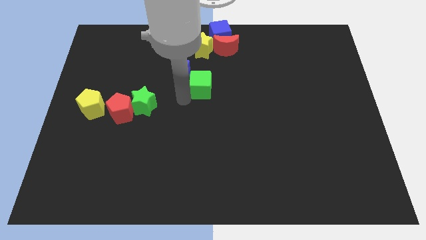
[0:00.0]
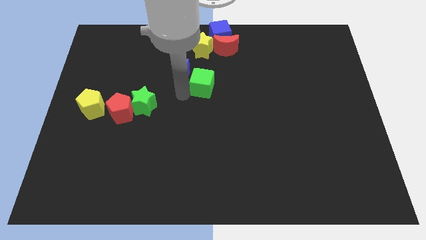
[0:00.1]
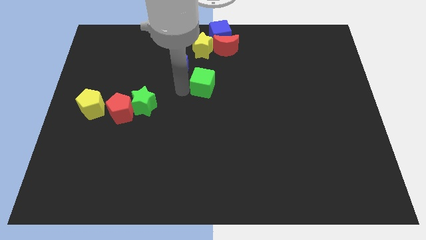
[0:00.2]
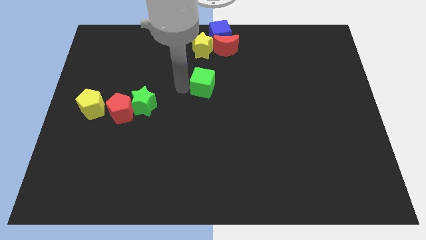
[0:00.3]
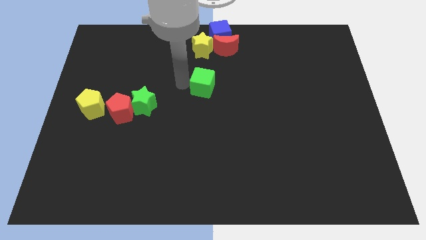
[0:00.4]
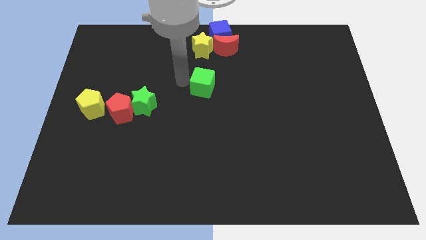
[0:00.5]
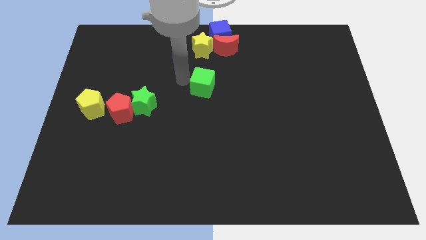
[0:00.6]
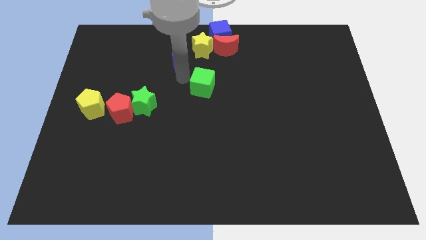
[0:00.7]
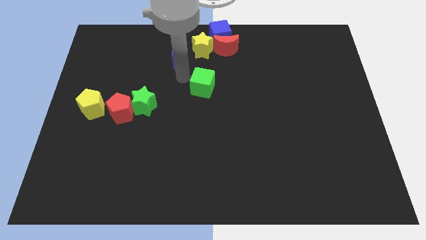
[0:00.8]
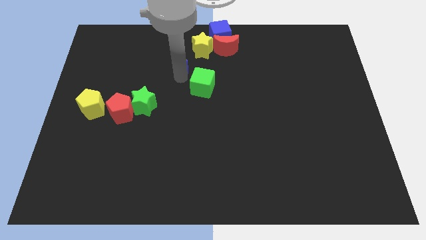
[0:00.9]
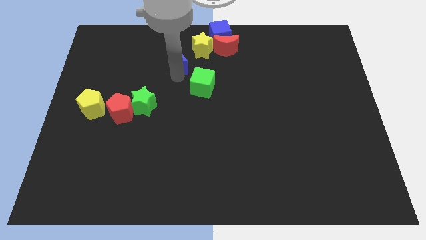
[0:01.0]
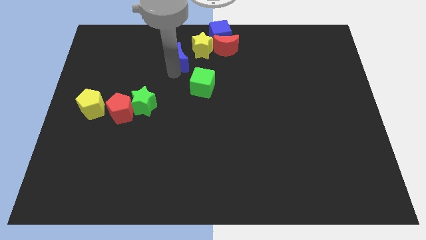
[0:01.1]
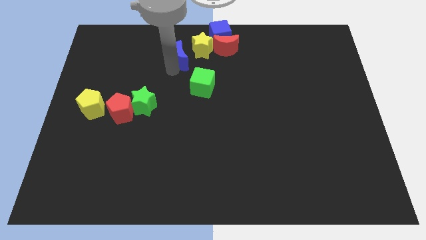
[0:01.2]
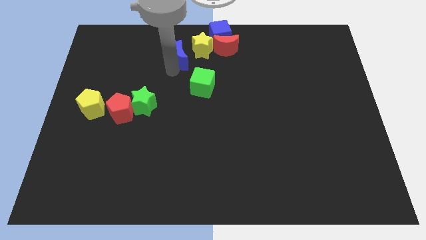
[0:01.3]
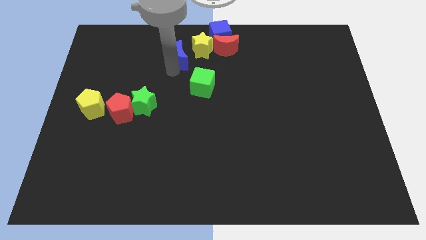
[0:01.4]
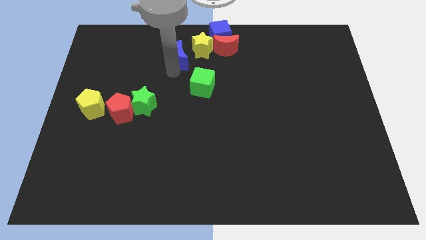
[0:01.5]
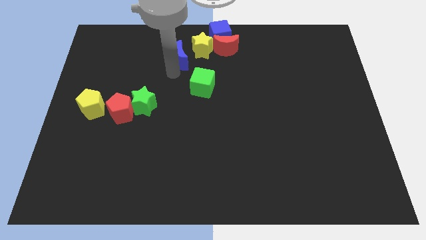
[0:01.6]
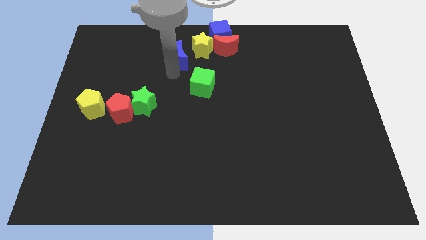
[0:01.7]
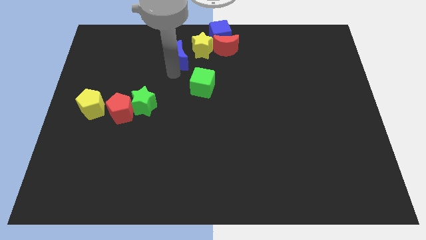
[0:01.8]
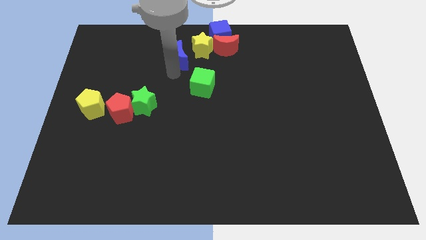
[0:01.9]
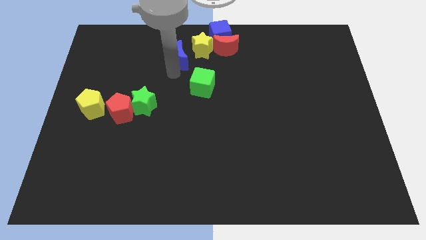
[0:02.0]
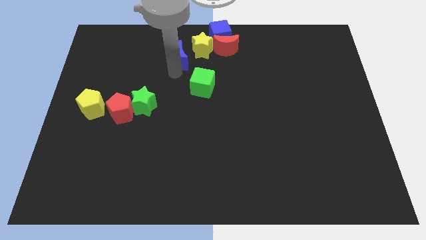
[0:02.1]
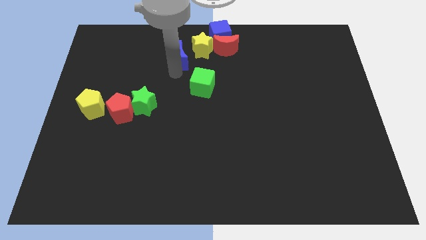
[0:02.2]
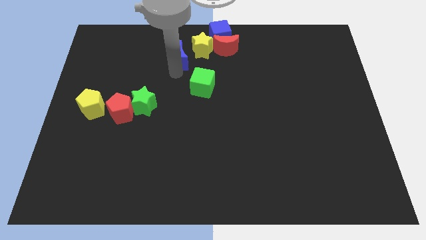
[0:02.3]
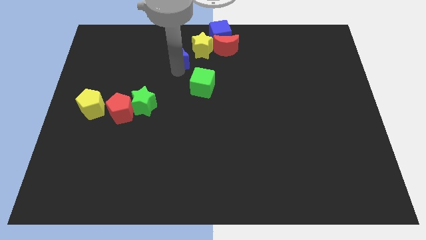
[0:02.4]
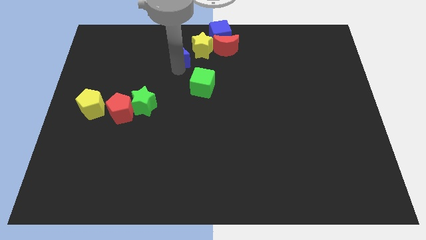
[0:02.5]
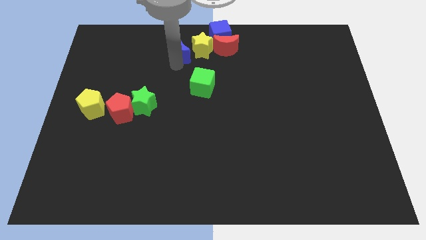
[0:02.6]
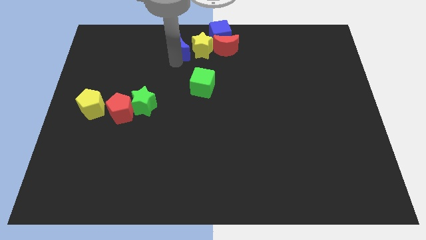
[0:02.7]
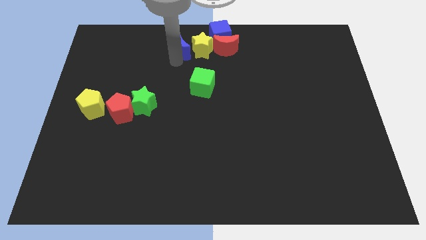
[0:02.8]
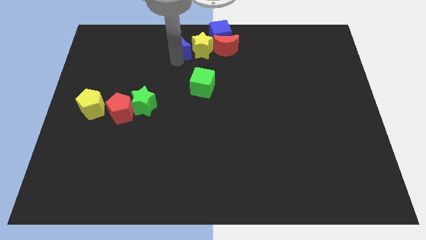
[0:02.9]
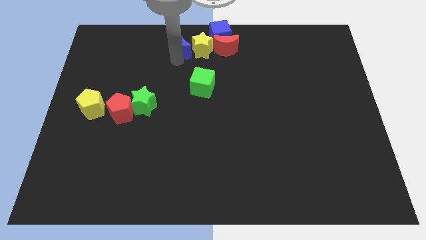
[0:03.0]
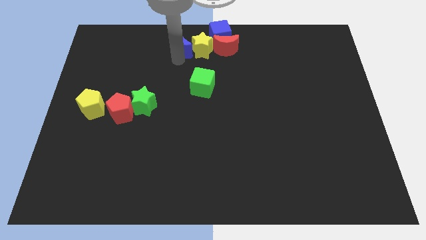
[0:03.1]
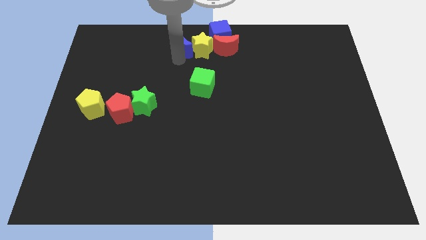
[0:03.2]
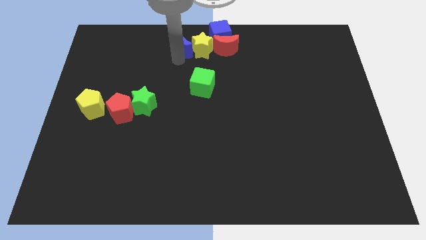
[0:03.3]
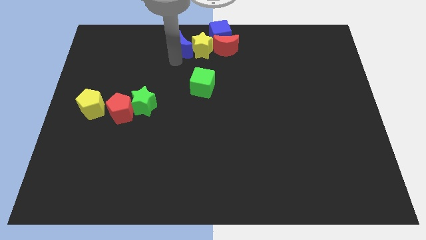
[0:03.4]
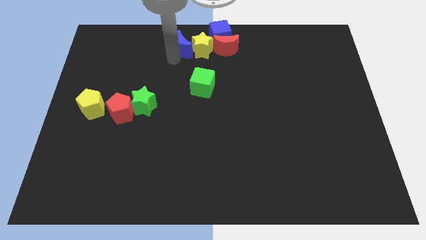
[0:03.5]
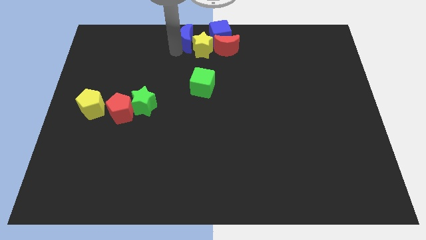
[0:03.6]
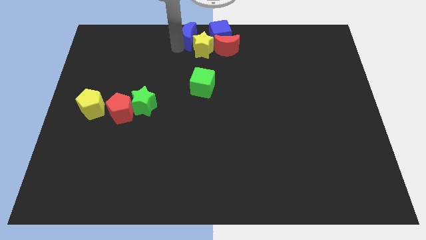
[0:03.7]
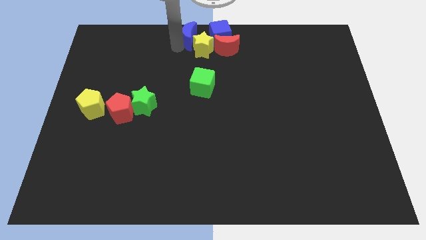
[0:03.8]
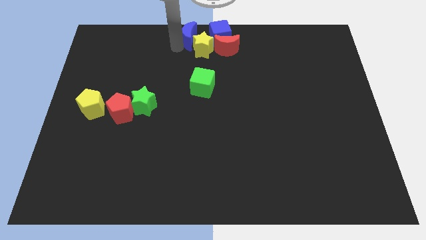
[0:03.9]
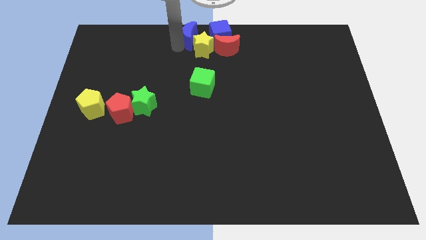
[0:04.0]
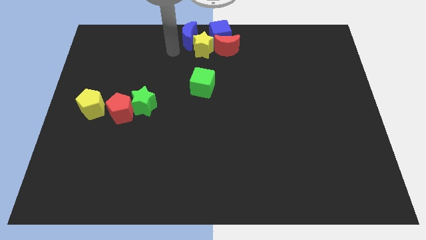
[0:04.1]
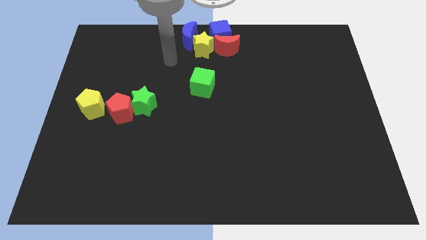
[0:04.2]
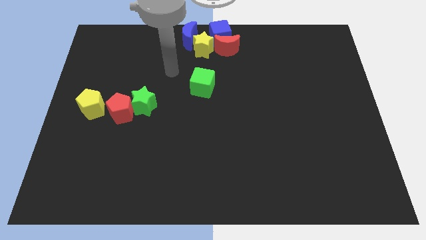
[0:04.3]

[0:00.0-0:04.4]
place blue crescent left of yellow star

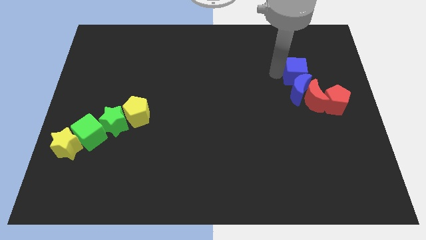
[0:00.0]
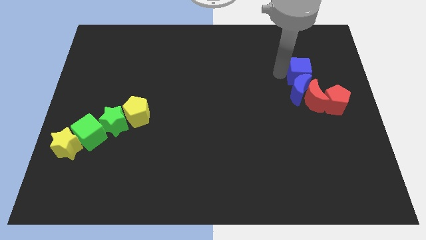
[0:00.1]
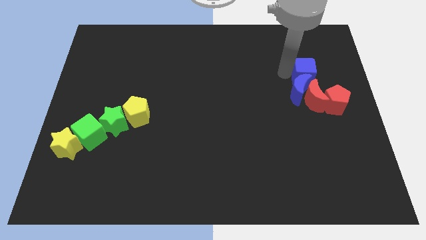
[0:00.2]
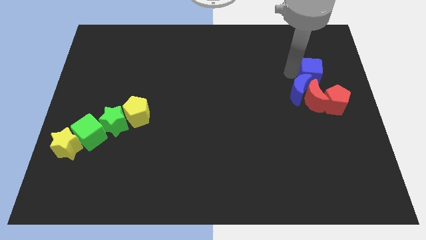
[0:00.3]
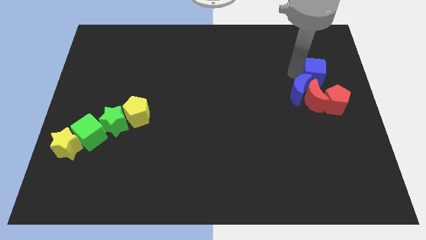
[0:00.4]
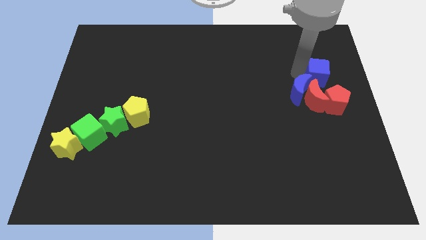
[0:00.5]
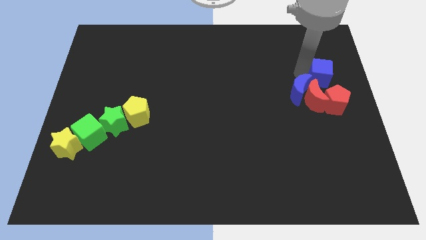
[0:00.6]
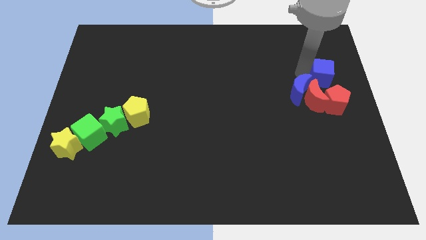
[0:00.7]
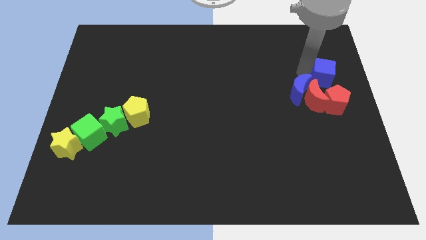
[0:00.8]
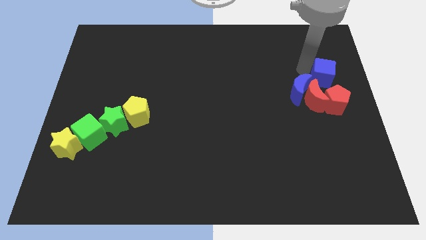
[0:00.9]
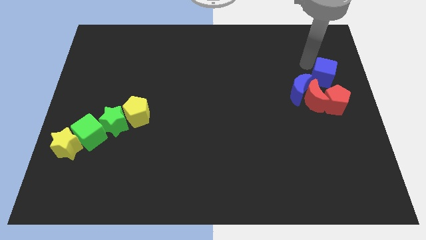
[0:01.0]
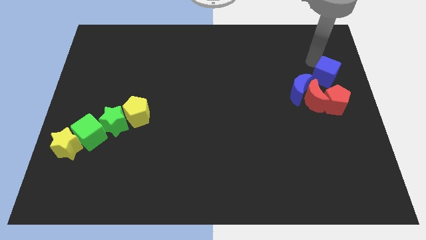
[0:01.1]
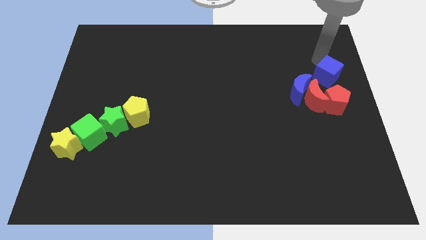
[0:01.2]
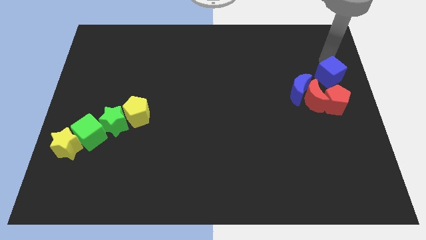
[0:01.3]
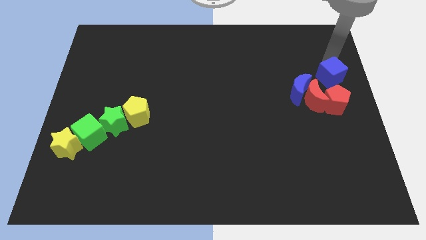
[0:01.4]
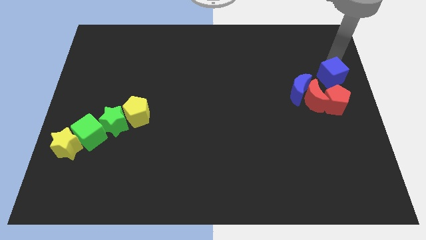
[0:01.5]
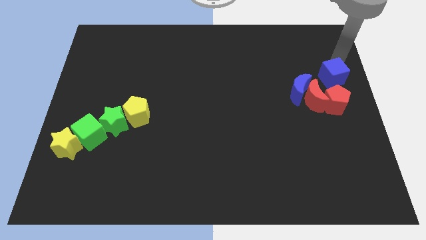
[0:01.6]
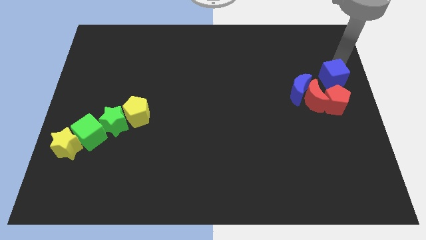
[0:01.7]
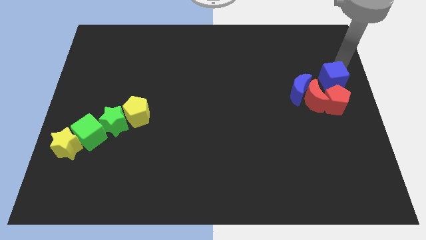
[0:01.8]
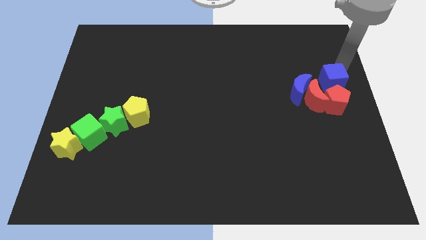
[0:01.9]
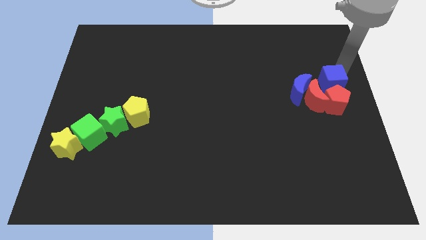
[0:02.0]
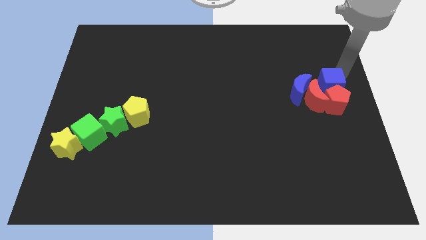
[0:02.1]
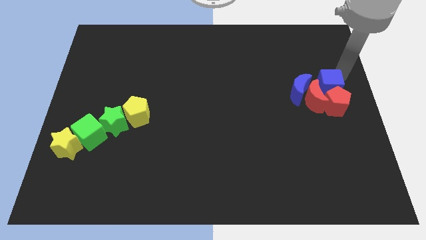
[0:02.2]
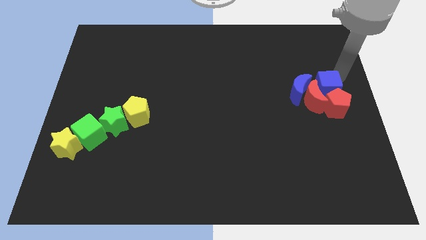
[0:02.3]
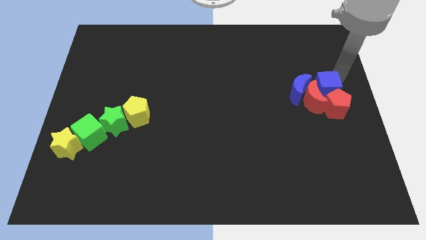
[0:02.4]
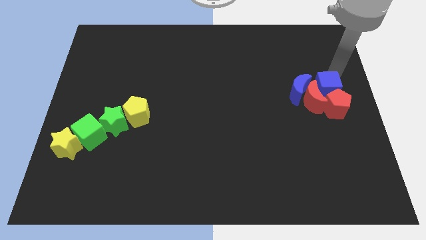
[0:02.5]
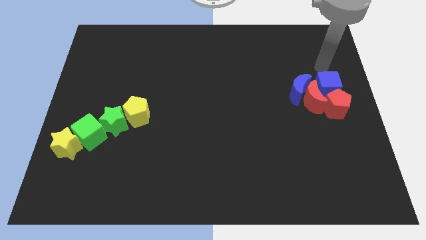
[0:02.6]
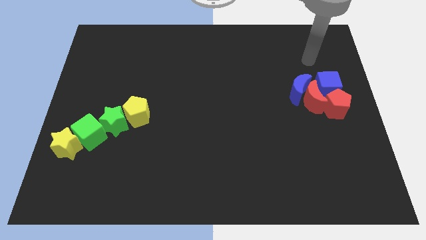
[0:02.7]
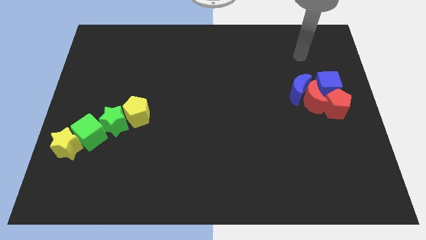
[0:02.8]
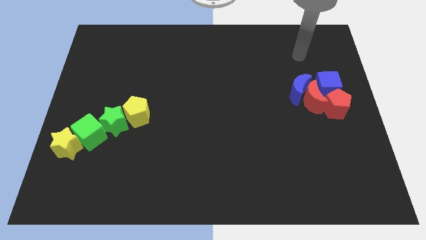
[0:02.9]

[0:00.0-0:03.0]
move the blue cube into the red blocks

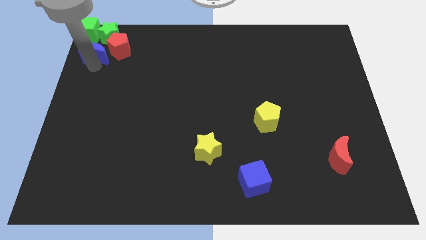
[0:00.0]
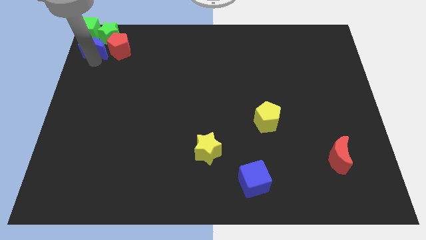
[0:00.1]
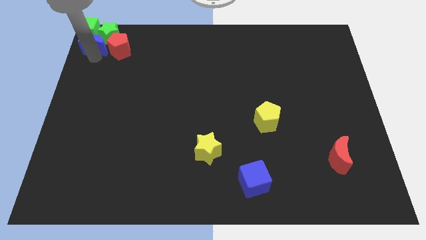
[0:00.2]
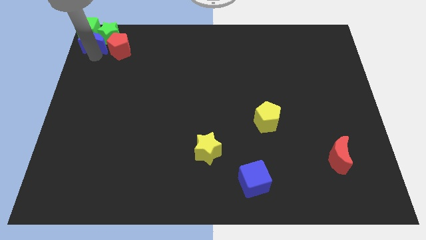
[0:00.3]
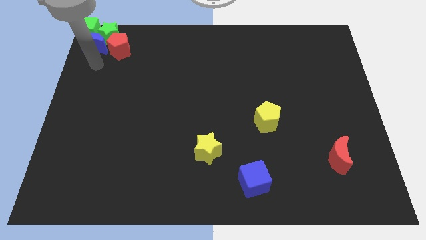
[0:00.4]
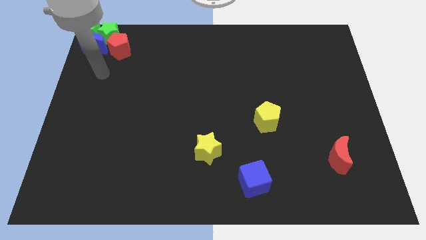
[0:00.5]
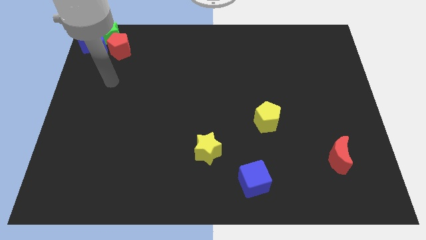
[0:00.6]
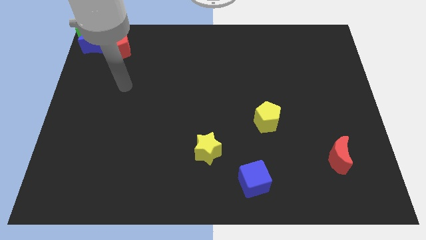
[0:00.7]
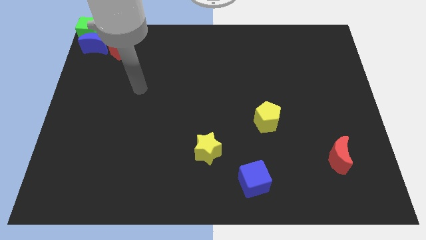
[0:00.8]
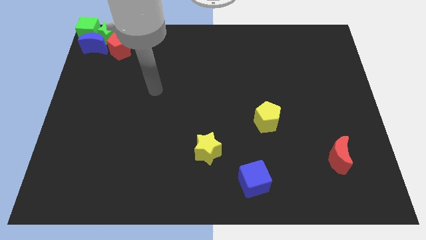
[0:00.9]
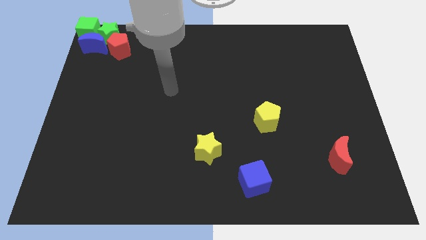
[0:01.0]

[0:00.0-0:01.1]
push yellow pentagon above blue cube

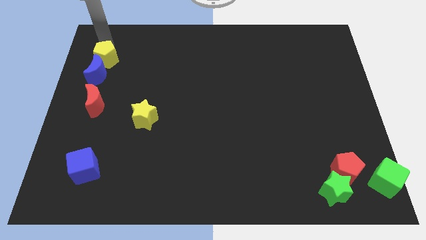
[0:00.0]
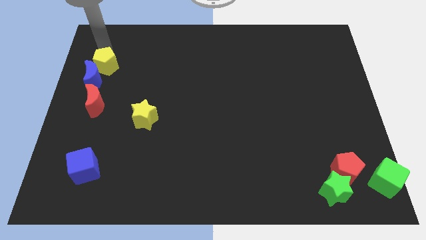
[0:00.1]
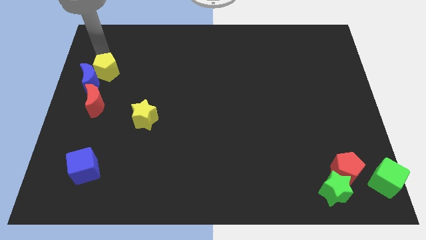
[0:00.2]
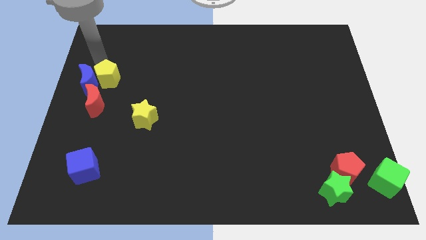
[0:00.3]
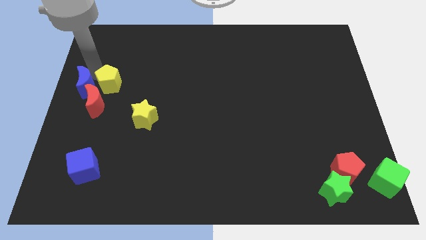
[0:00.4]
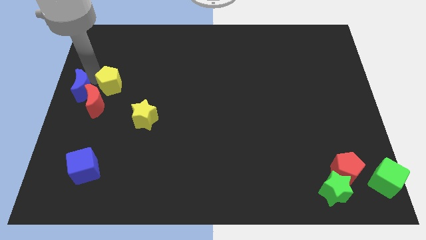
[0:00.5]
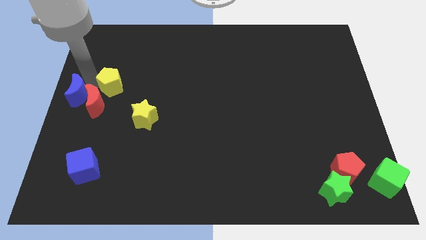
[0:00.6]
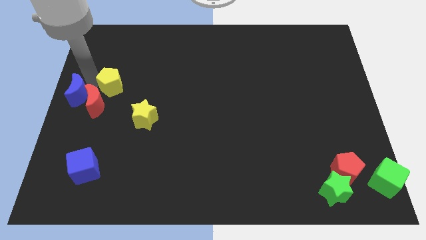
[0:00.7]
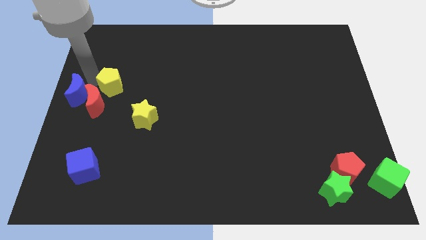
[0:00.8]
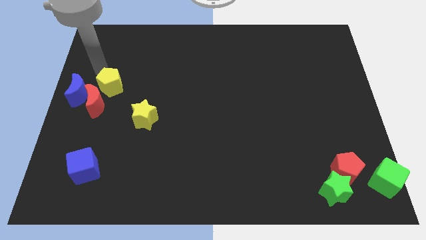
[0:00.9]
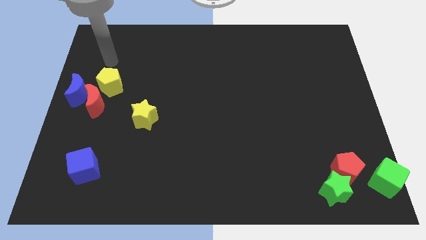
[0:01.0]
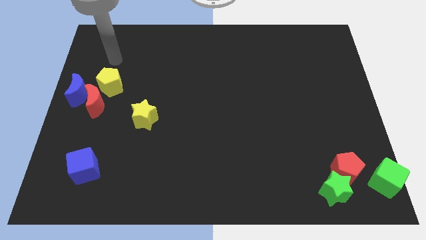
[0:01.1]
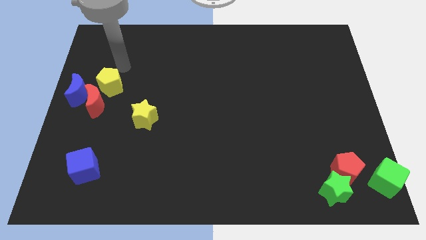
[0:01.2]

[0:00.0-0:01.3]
separate the yellow pentagon and blue crescent
